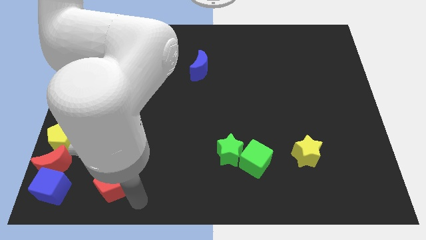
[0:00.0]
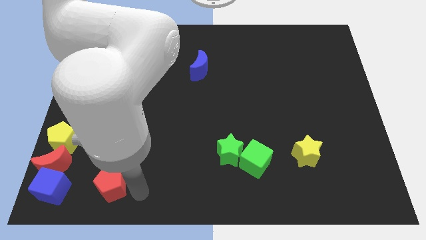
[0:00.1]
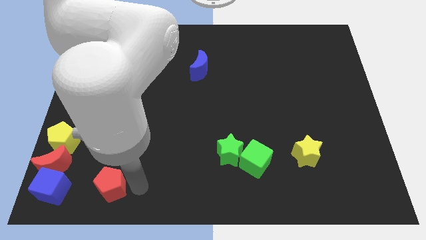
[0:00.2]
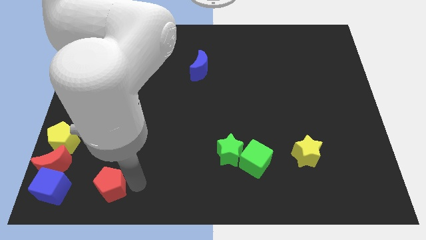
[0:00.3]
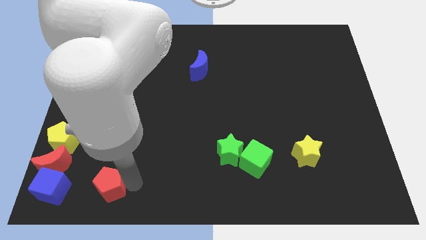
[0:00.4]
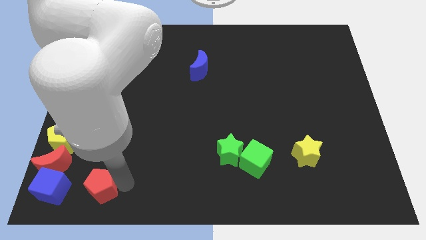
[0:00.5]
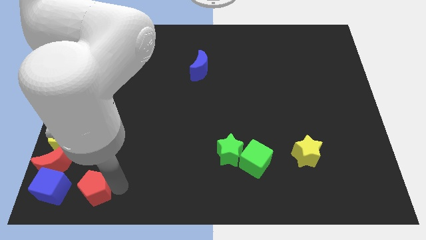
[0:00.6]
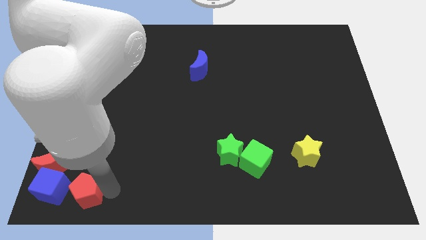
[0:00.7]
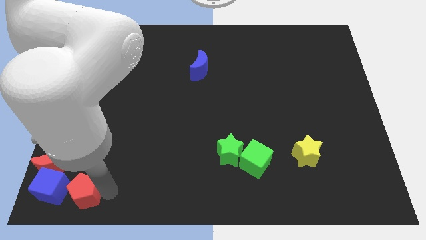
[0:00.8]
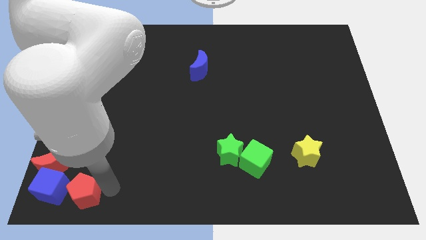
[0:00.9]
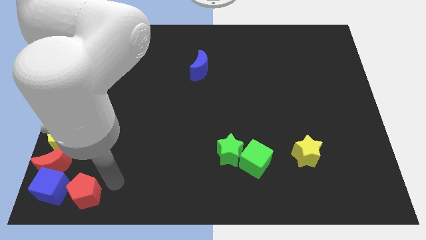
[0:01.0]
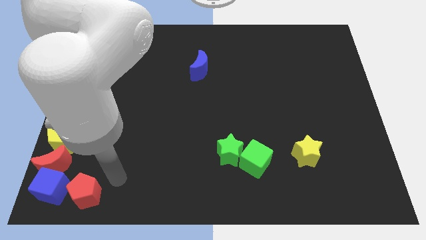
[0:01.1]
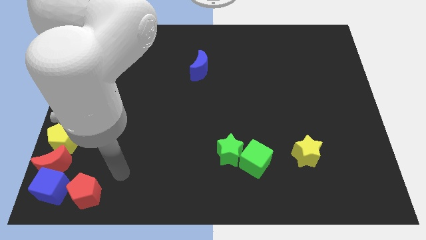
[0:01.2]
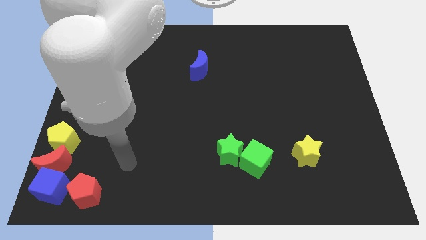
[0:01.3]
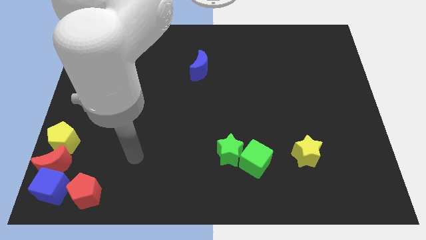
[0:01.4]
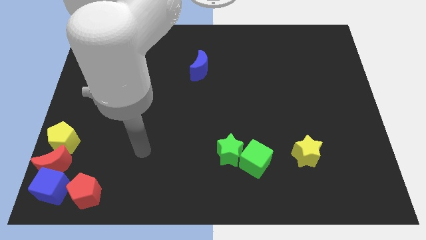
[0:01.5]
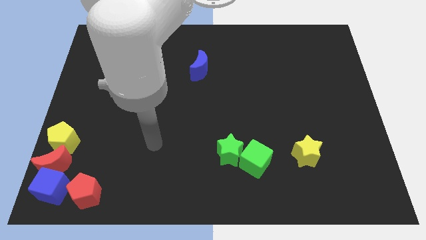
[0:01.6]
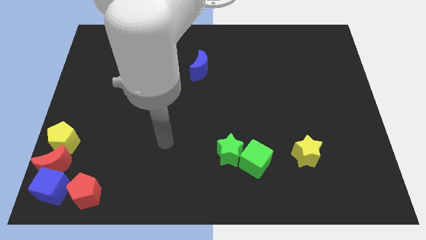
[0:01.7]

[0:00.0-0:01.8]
push red pentagon to the right of the blue cube

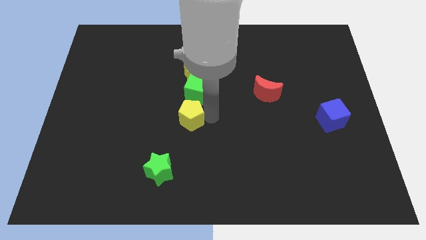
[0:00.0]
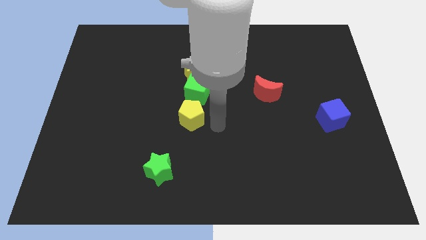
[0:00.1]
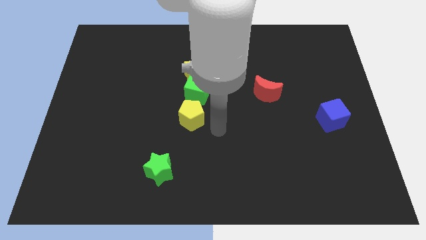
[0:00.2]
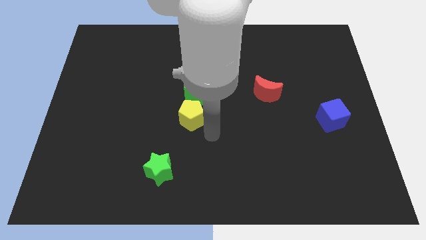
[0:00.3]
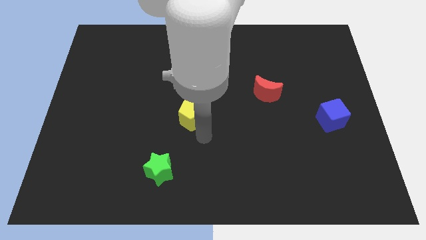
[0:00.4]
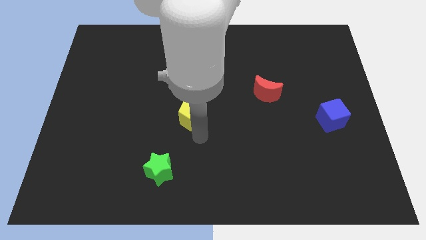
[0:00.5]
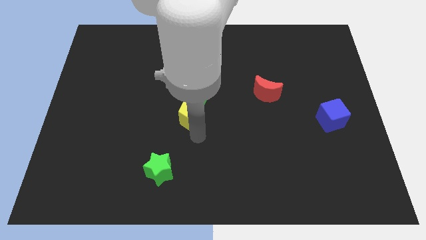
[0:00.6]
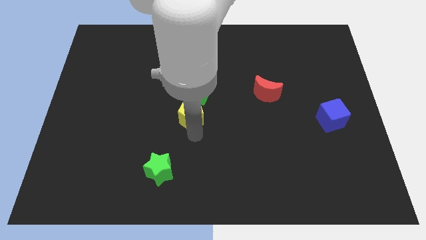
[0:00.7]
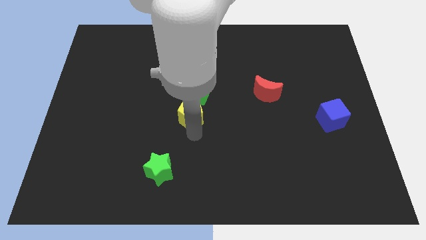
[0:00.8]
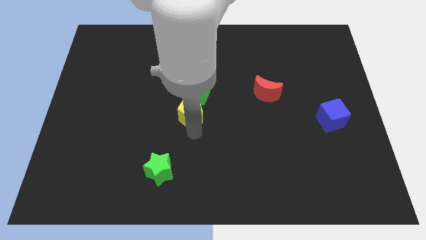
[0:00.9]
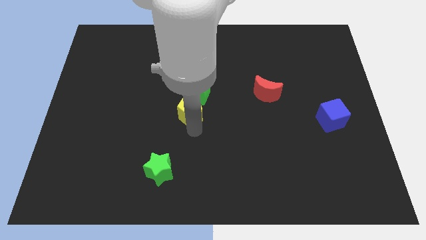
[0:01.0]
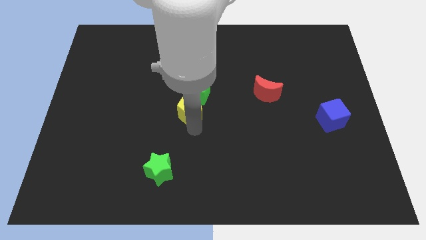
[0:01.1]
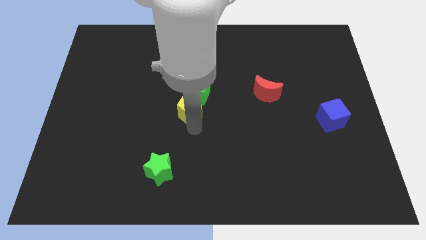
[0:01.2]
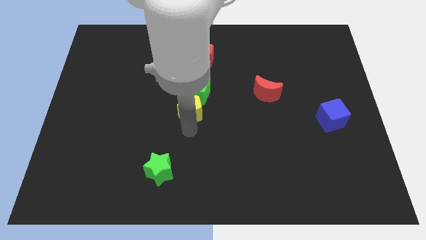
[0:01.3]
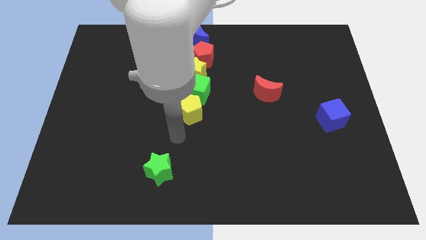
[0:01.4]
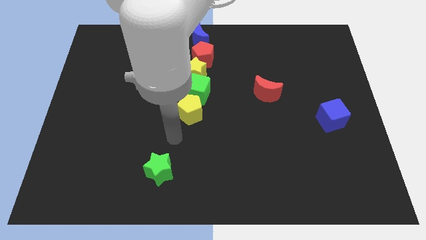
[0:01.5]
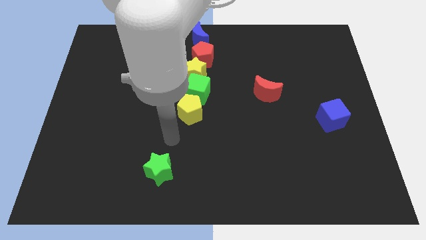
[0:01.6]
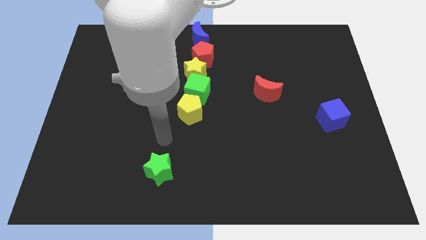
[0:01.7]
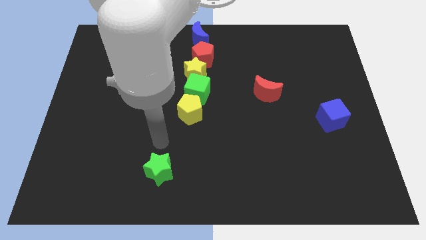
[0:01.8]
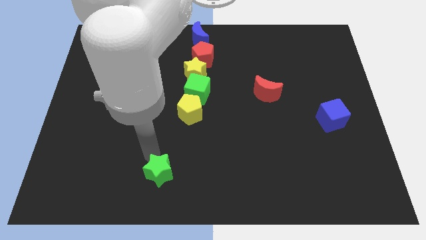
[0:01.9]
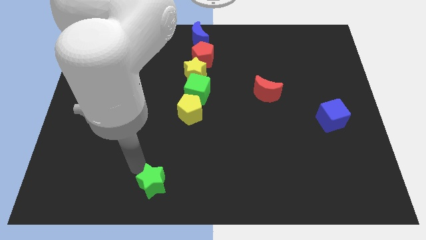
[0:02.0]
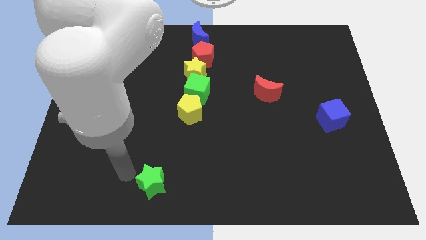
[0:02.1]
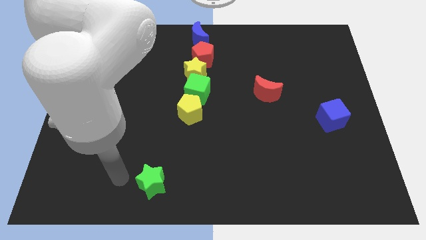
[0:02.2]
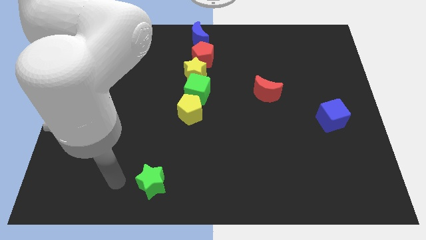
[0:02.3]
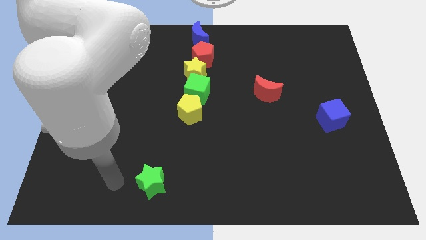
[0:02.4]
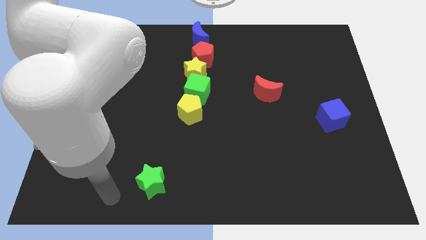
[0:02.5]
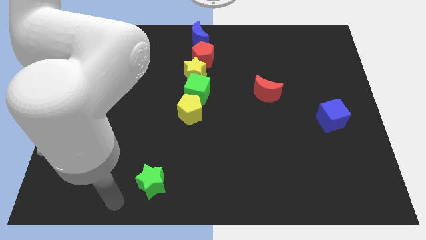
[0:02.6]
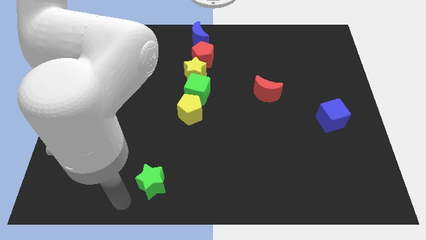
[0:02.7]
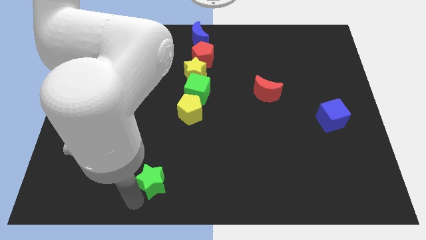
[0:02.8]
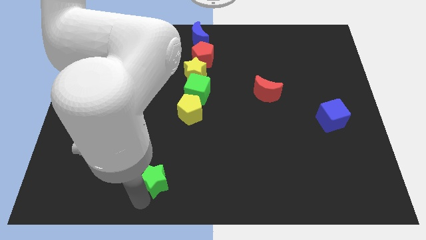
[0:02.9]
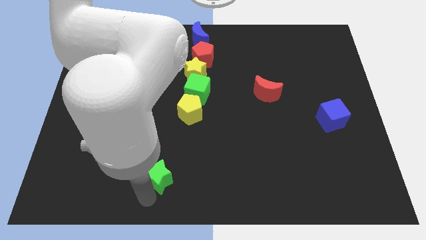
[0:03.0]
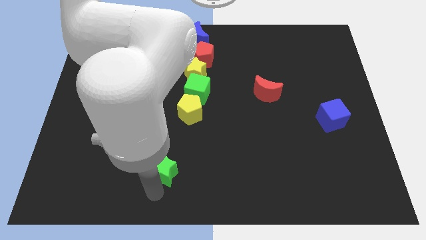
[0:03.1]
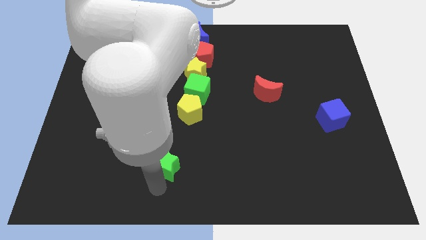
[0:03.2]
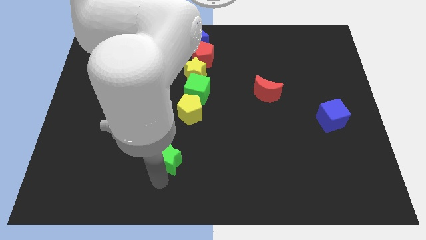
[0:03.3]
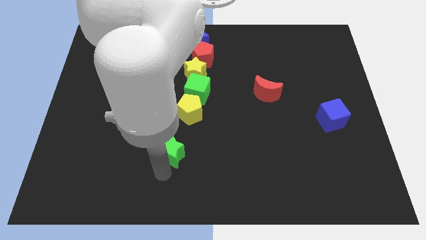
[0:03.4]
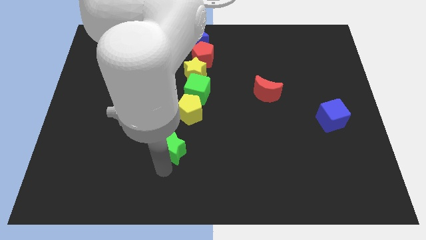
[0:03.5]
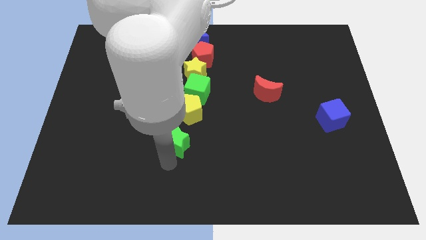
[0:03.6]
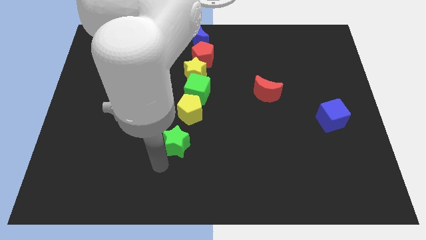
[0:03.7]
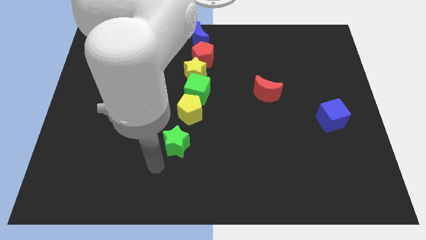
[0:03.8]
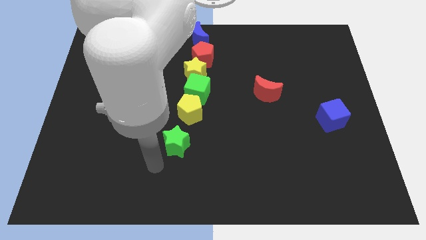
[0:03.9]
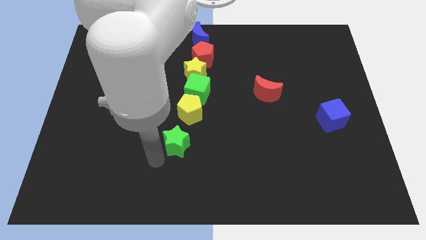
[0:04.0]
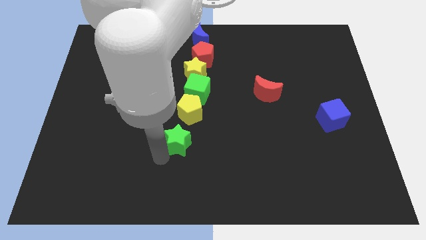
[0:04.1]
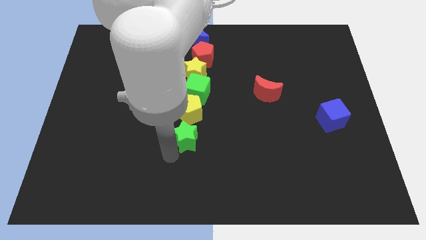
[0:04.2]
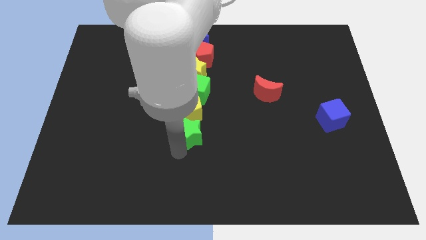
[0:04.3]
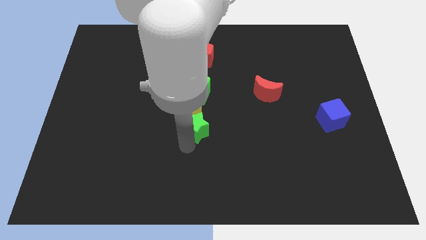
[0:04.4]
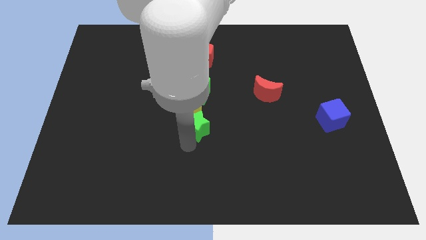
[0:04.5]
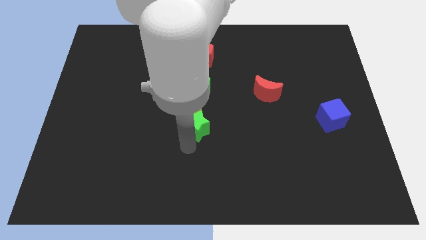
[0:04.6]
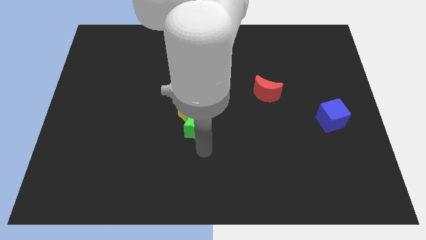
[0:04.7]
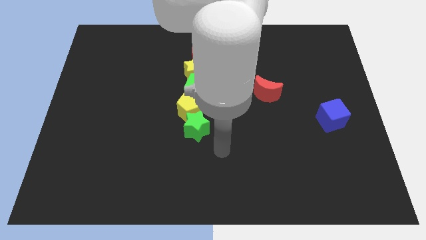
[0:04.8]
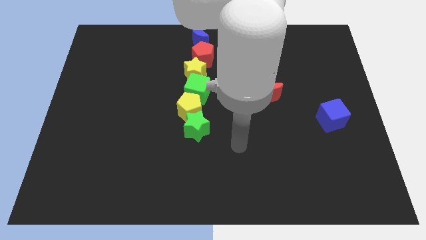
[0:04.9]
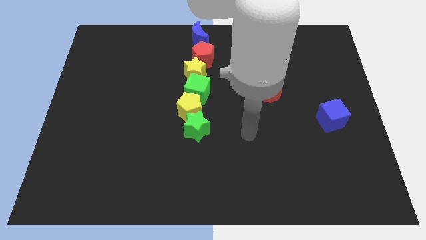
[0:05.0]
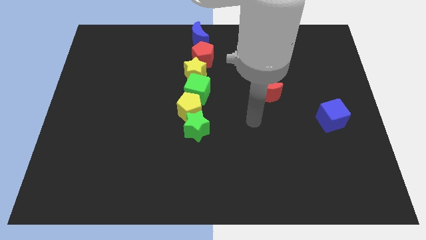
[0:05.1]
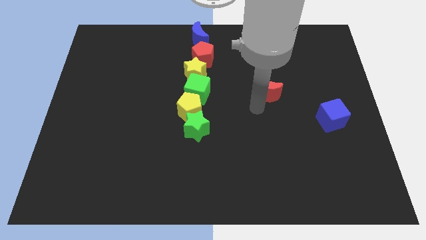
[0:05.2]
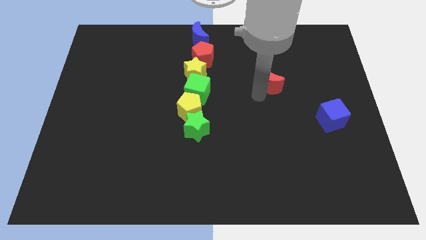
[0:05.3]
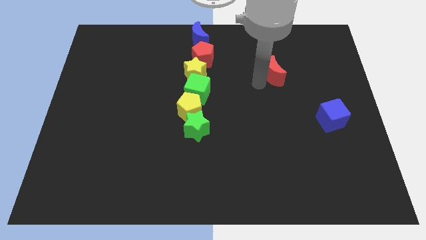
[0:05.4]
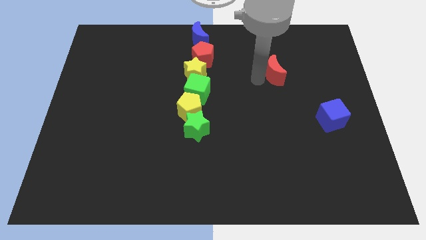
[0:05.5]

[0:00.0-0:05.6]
place the green star to bottom of yellow pentagon

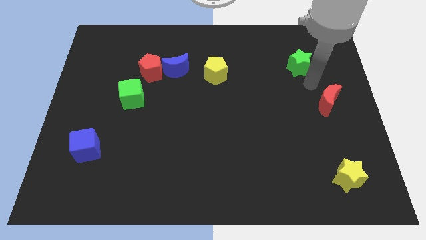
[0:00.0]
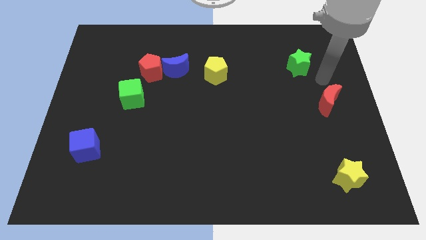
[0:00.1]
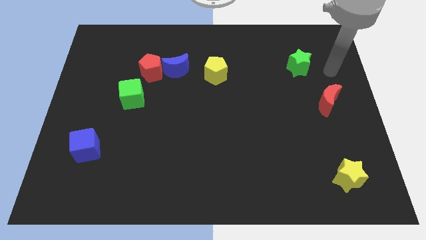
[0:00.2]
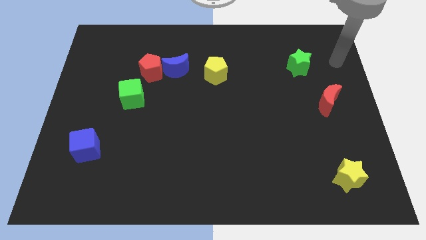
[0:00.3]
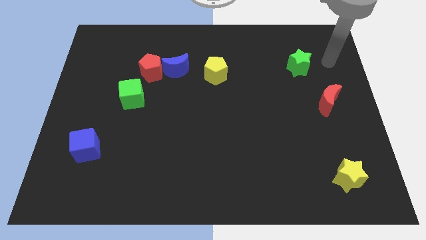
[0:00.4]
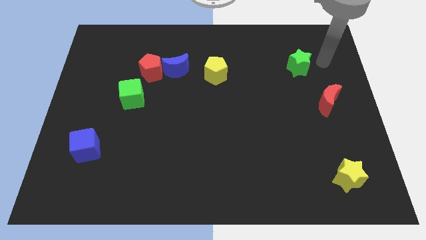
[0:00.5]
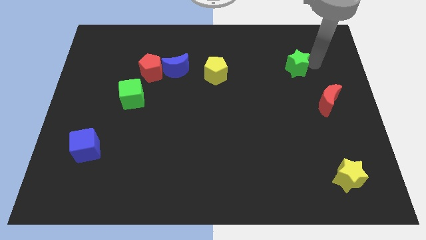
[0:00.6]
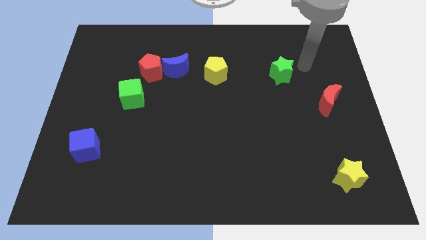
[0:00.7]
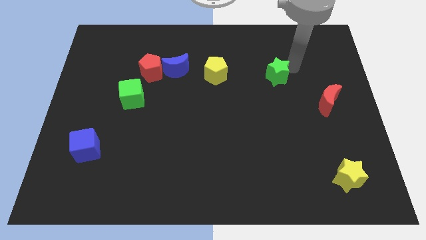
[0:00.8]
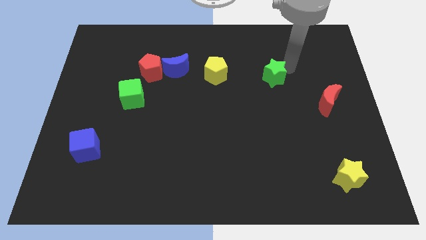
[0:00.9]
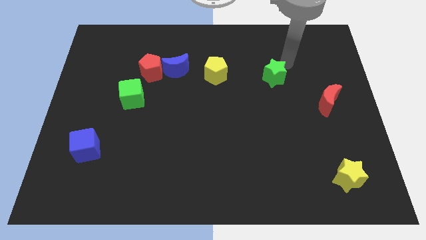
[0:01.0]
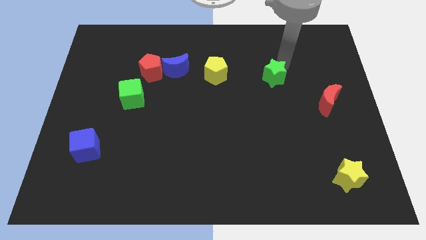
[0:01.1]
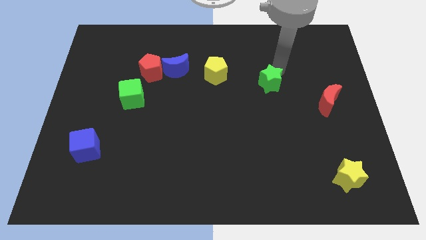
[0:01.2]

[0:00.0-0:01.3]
place the green star diagonally in between the red moon and yellow pentagon

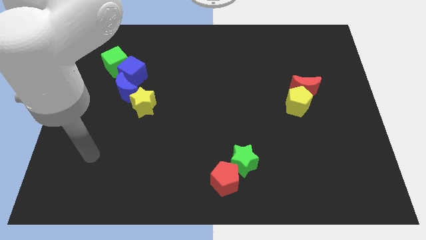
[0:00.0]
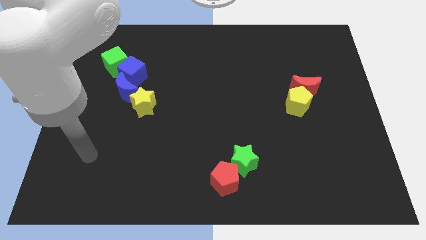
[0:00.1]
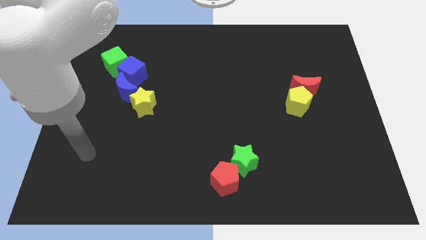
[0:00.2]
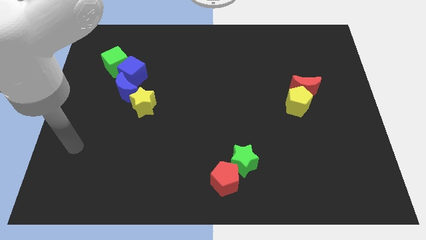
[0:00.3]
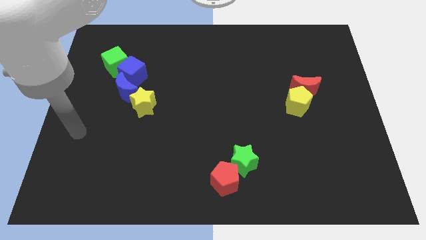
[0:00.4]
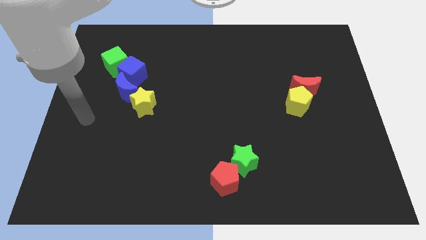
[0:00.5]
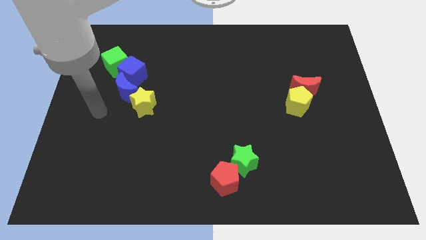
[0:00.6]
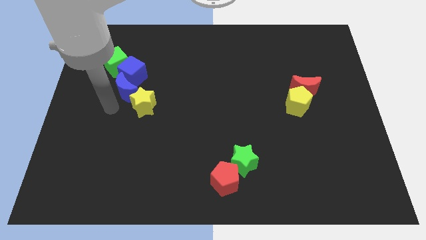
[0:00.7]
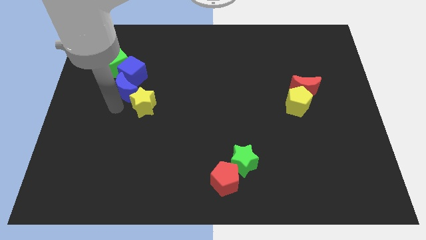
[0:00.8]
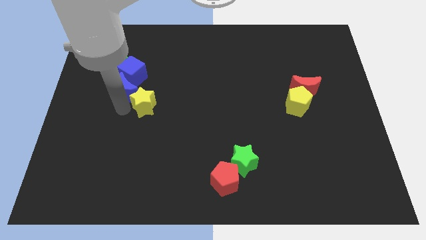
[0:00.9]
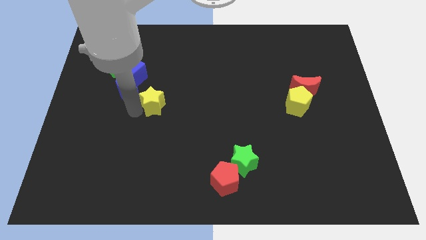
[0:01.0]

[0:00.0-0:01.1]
tap on the bottom of the yellow star
